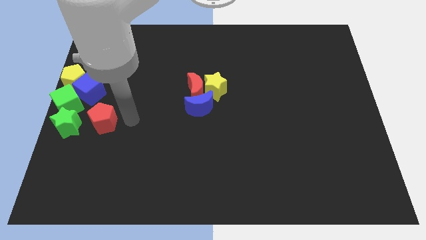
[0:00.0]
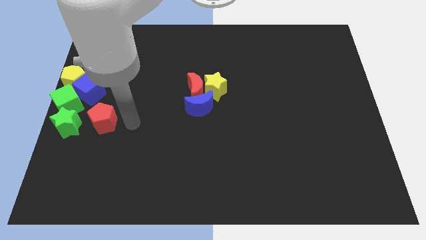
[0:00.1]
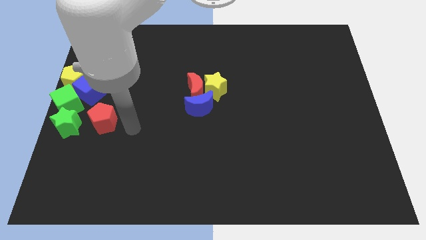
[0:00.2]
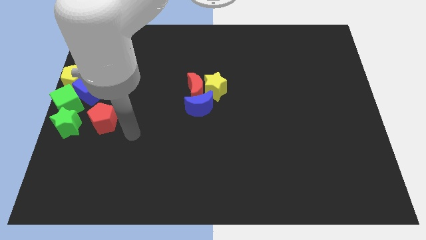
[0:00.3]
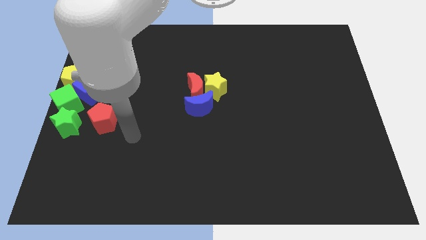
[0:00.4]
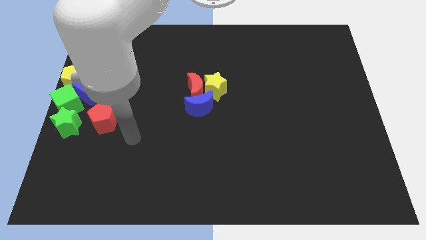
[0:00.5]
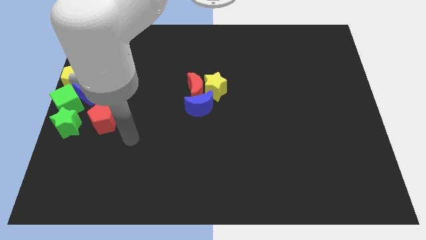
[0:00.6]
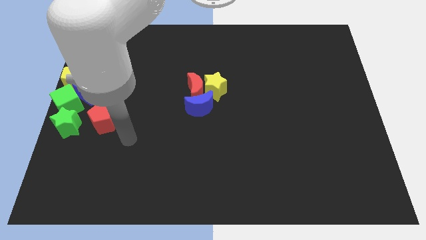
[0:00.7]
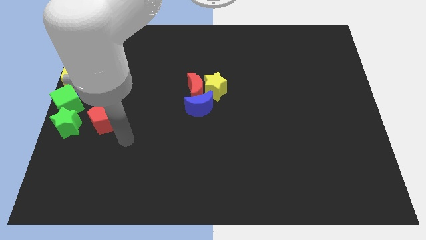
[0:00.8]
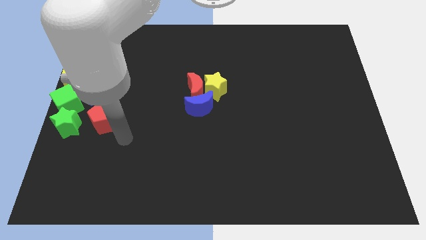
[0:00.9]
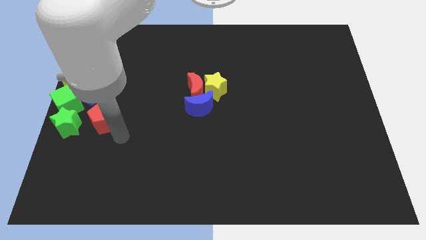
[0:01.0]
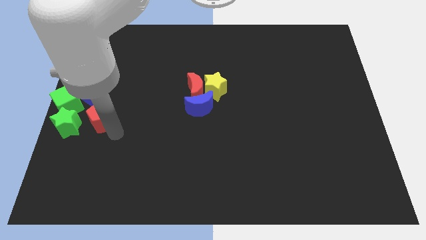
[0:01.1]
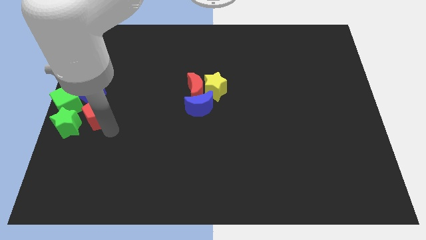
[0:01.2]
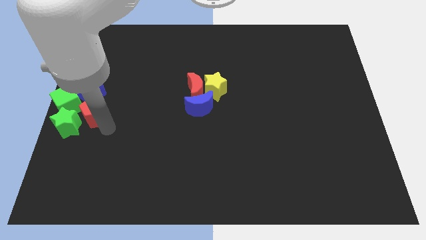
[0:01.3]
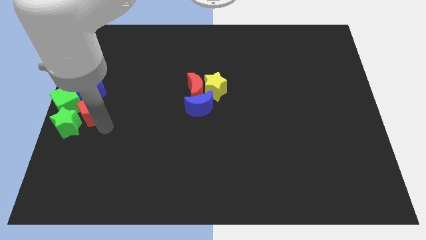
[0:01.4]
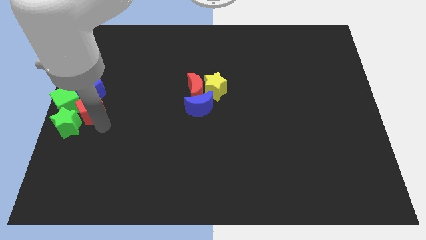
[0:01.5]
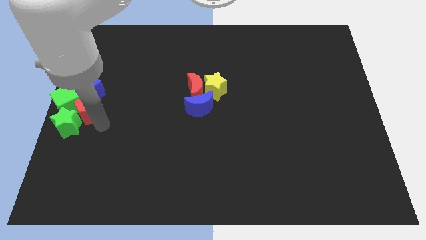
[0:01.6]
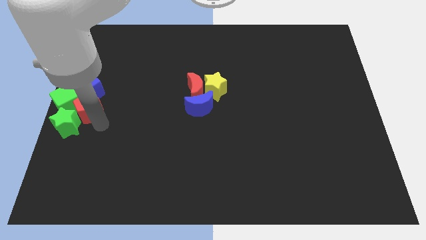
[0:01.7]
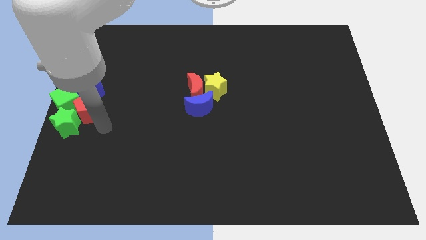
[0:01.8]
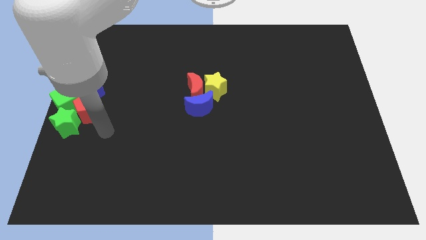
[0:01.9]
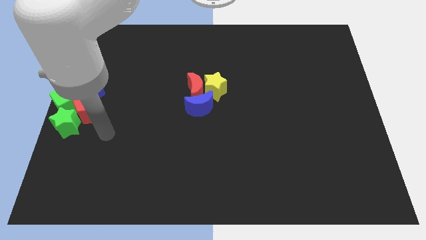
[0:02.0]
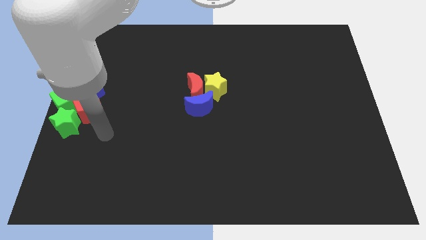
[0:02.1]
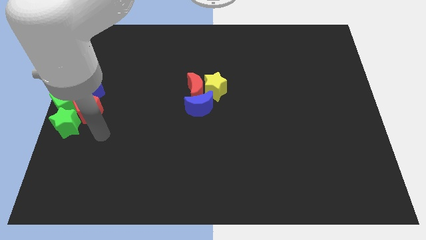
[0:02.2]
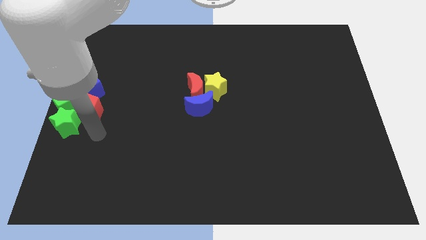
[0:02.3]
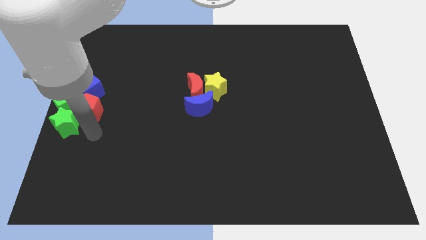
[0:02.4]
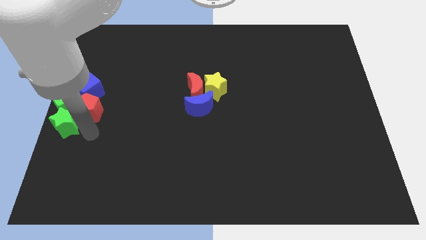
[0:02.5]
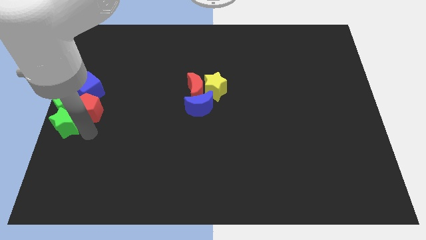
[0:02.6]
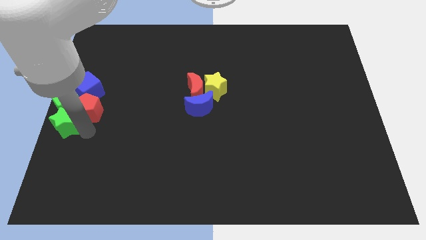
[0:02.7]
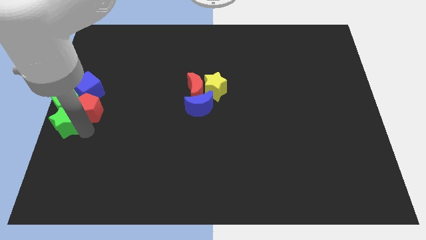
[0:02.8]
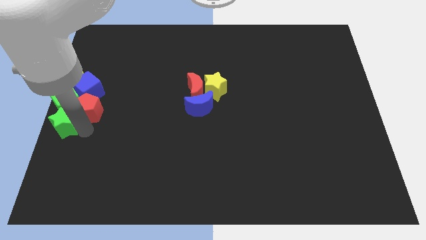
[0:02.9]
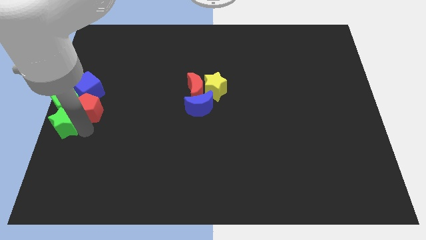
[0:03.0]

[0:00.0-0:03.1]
push red pentagon into group of stars

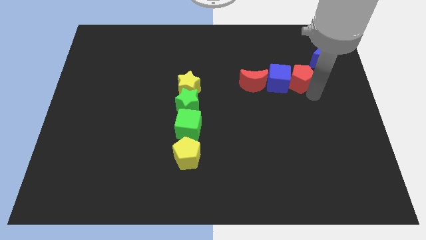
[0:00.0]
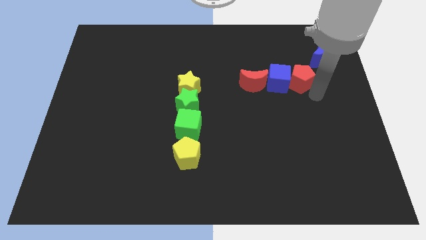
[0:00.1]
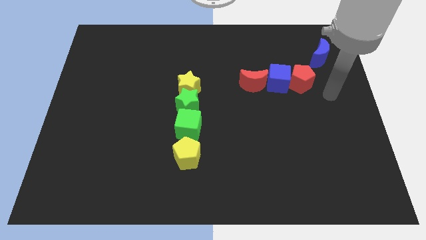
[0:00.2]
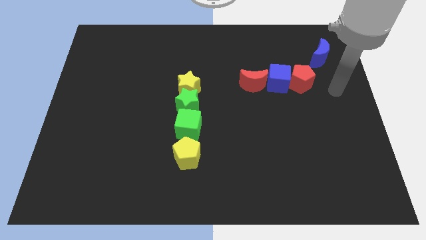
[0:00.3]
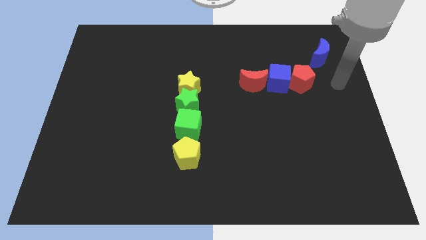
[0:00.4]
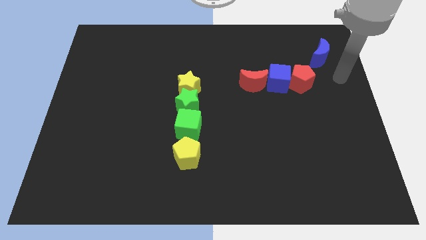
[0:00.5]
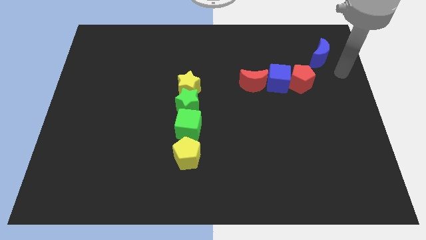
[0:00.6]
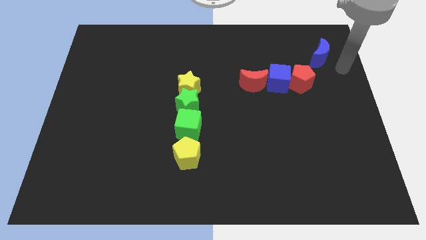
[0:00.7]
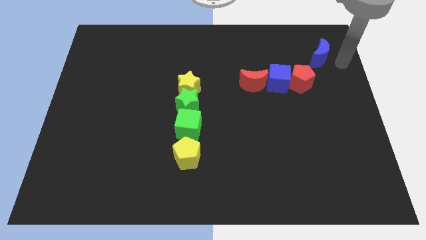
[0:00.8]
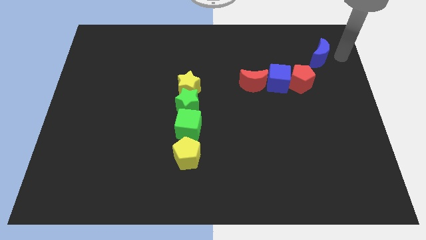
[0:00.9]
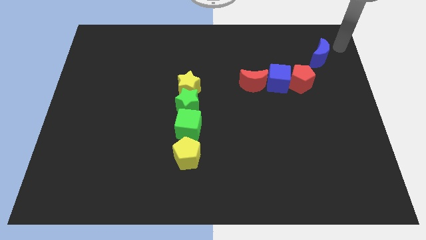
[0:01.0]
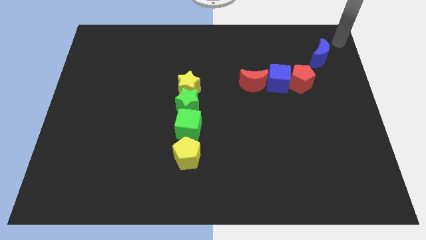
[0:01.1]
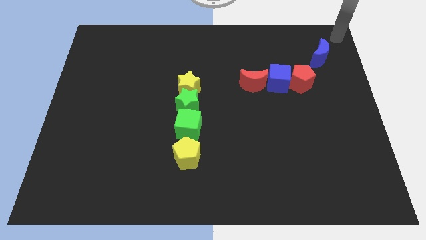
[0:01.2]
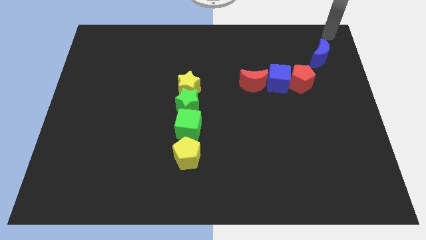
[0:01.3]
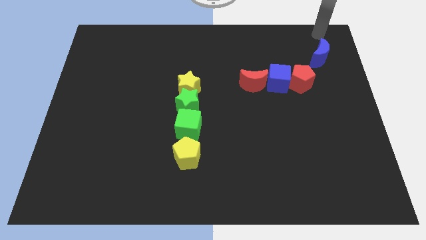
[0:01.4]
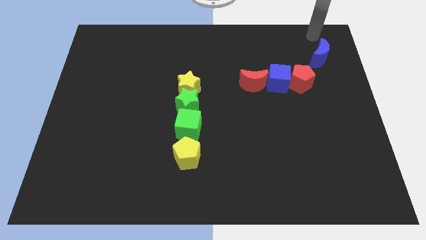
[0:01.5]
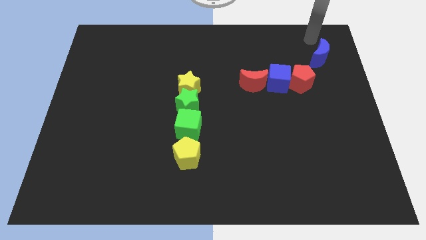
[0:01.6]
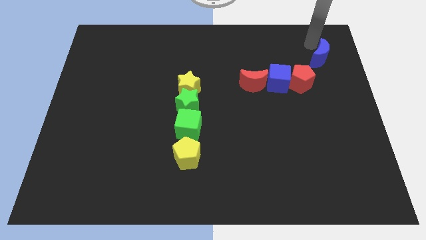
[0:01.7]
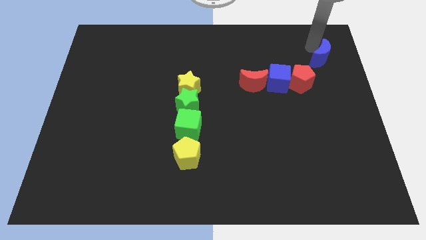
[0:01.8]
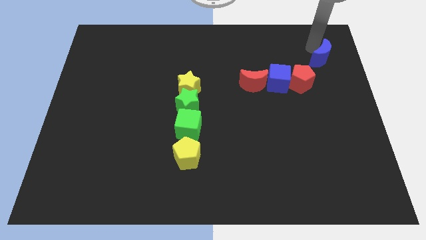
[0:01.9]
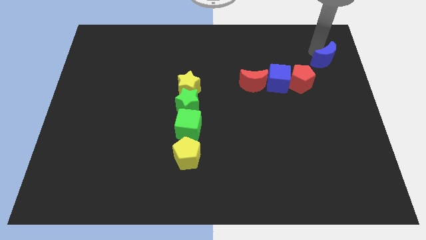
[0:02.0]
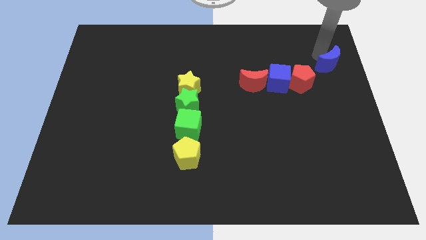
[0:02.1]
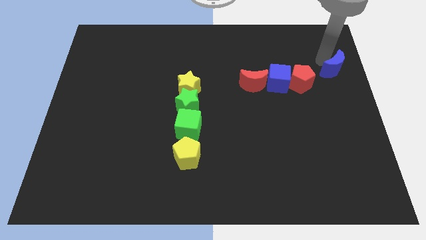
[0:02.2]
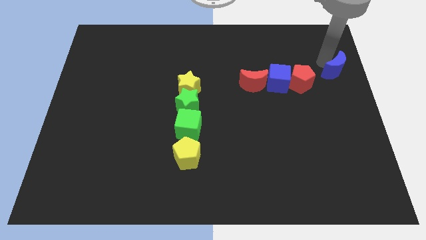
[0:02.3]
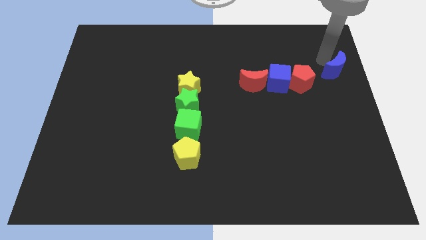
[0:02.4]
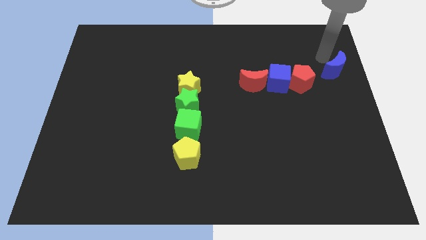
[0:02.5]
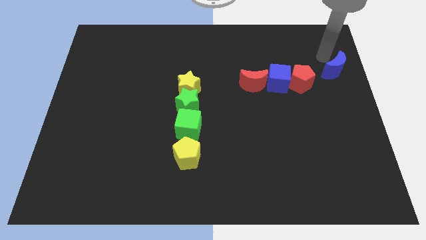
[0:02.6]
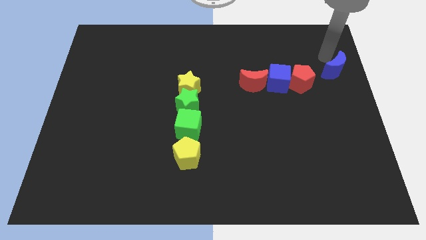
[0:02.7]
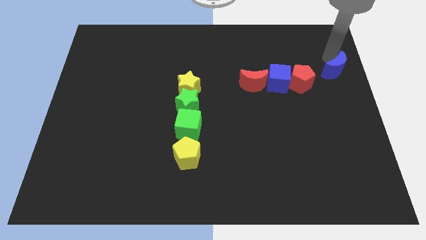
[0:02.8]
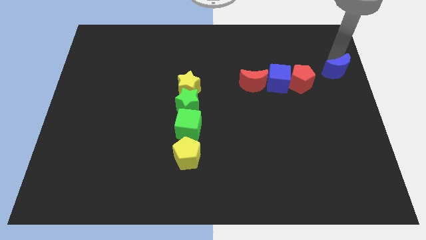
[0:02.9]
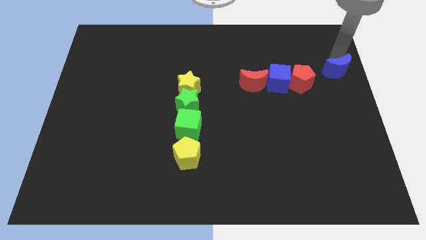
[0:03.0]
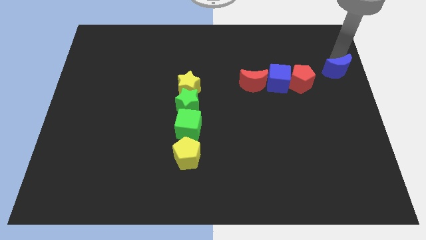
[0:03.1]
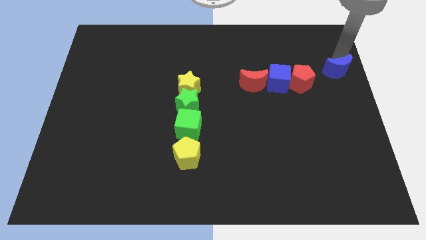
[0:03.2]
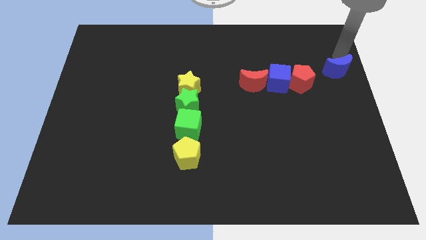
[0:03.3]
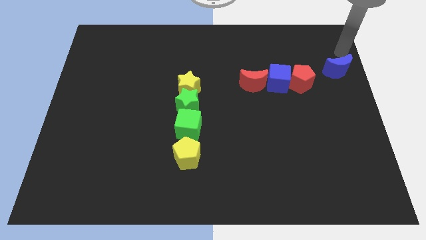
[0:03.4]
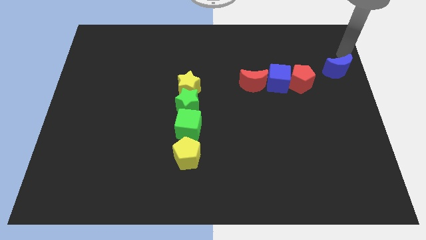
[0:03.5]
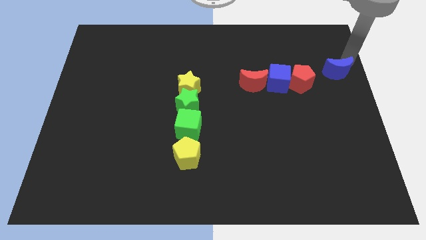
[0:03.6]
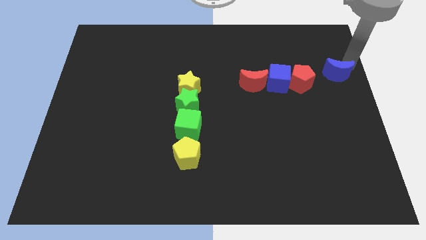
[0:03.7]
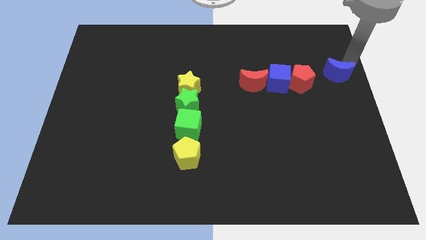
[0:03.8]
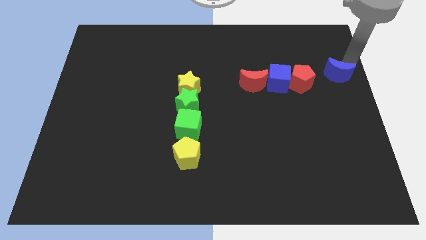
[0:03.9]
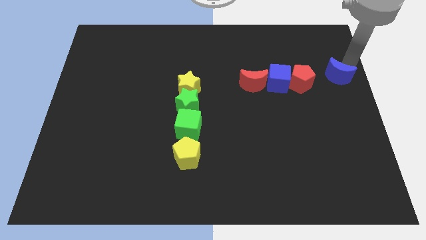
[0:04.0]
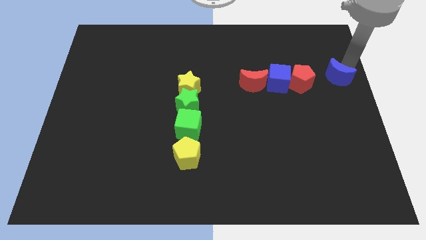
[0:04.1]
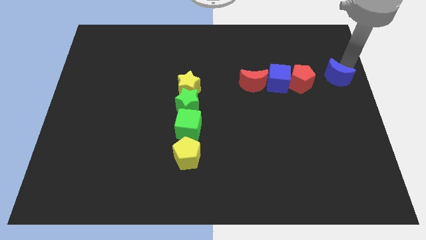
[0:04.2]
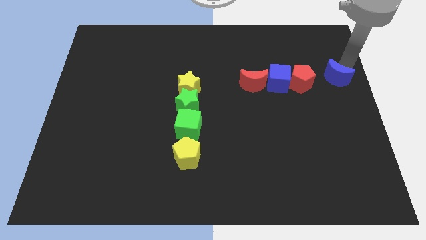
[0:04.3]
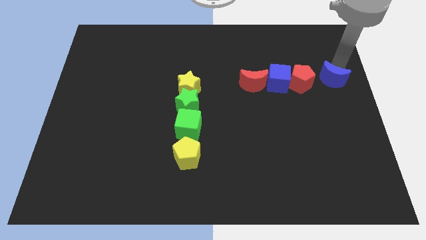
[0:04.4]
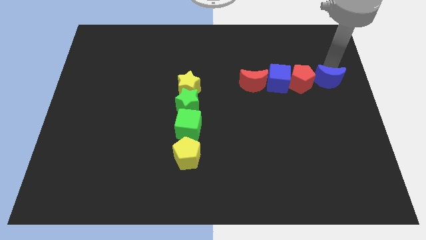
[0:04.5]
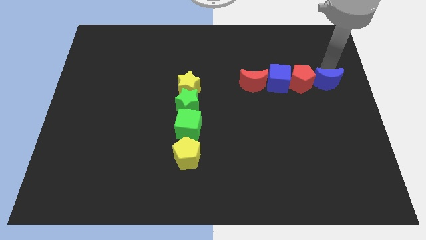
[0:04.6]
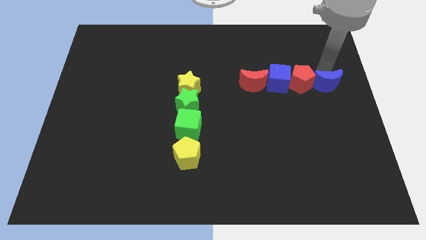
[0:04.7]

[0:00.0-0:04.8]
push the blue crescent into the right side of the horizontal line of blocks

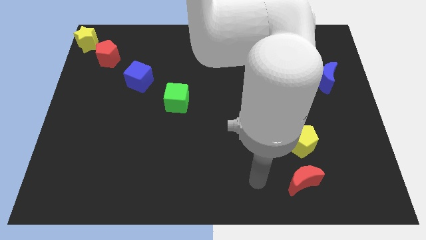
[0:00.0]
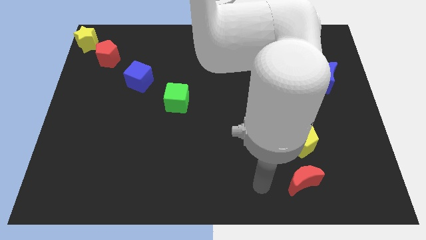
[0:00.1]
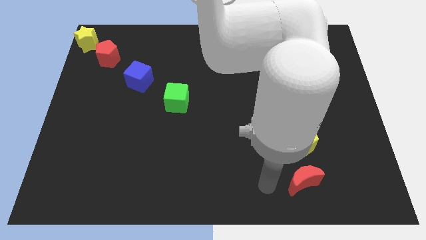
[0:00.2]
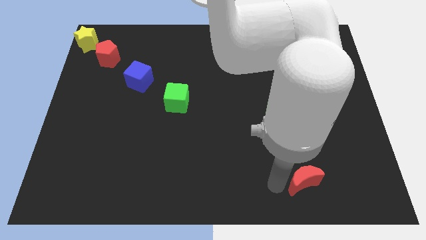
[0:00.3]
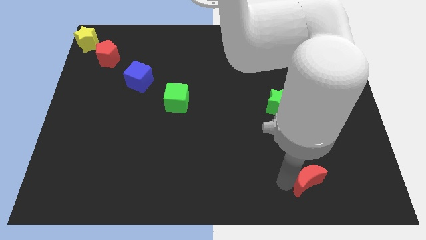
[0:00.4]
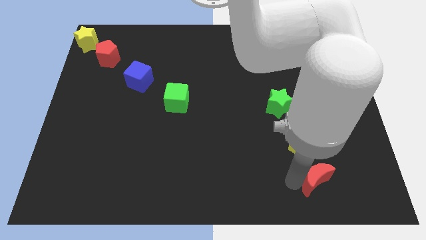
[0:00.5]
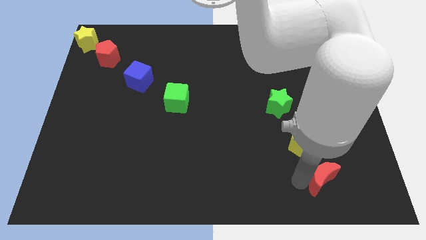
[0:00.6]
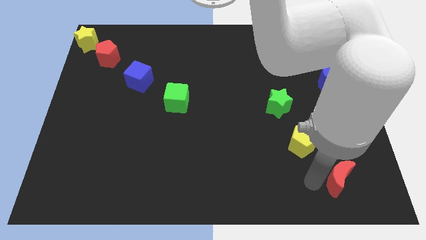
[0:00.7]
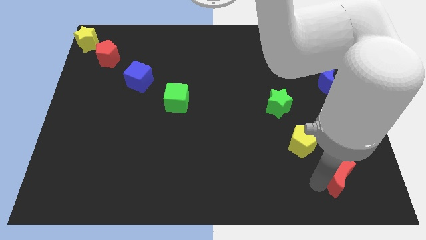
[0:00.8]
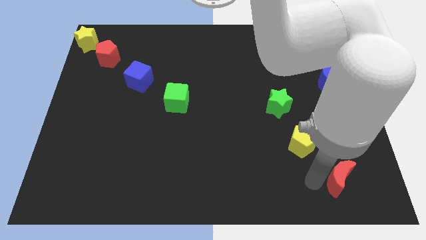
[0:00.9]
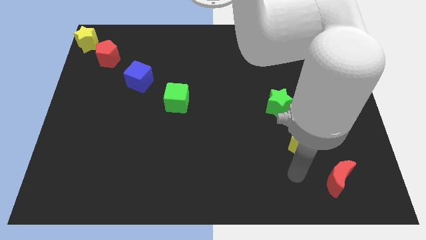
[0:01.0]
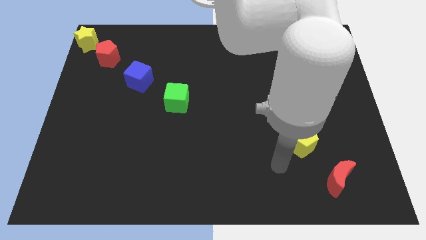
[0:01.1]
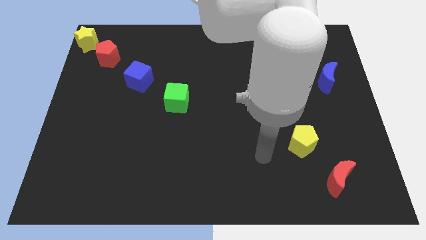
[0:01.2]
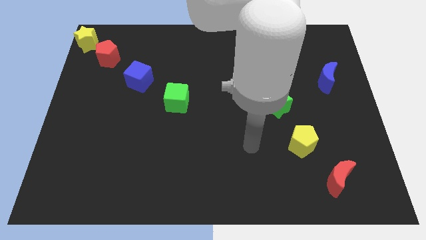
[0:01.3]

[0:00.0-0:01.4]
move the red crescent slightly to the right
